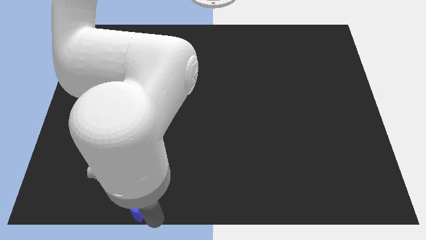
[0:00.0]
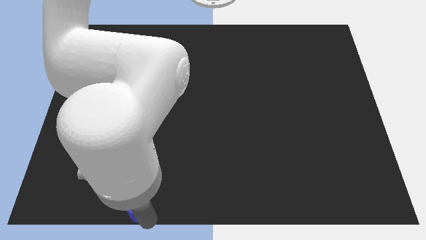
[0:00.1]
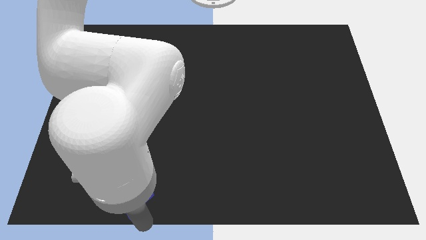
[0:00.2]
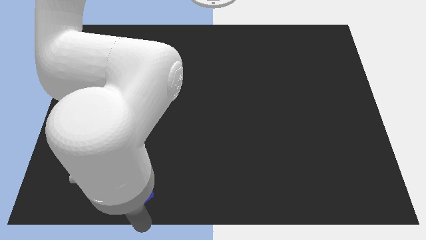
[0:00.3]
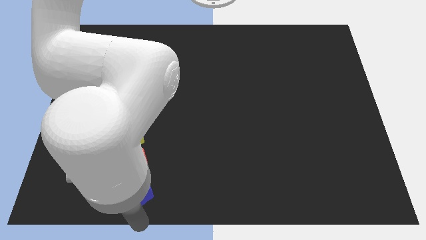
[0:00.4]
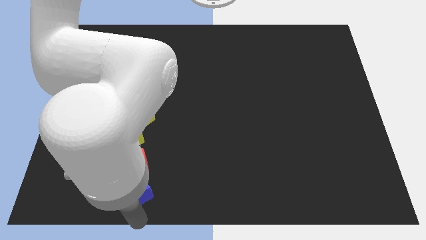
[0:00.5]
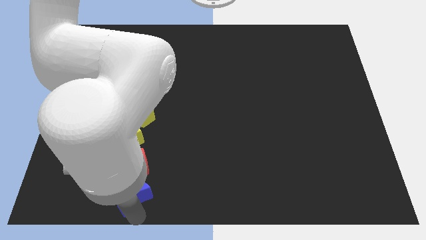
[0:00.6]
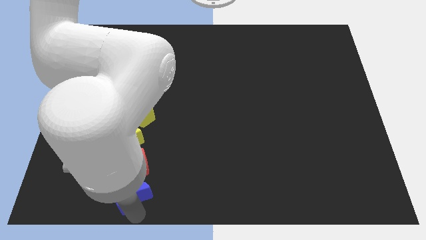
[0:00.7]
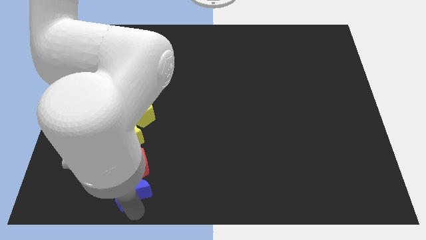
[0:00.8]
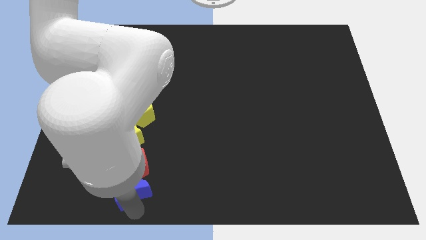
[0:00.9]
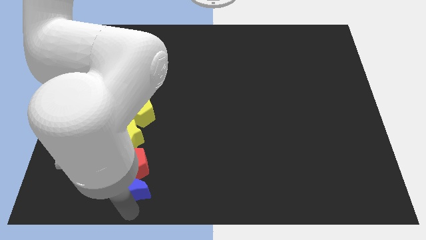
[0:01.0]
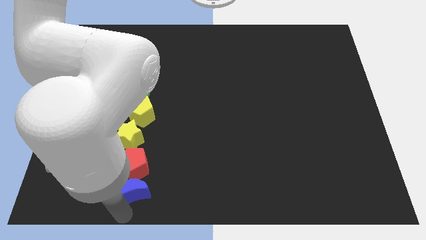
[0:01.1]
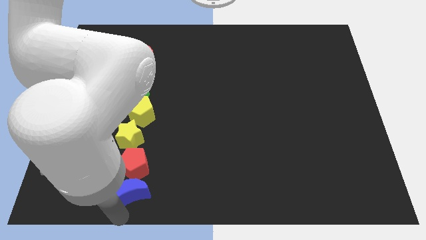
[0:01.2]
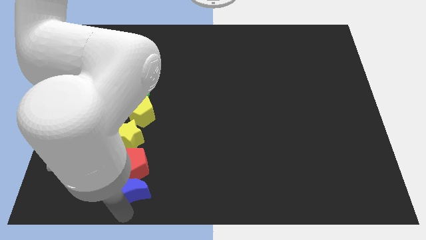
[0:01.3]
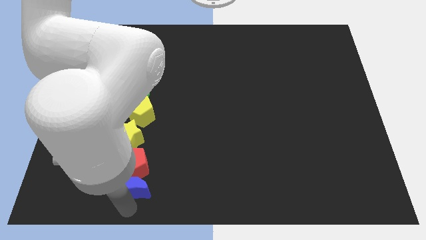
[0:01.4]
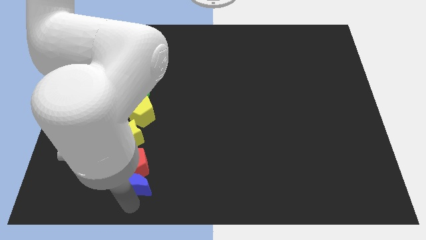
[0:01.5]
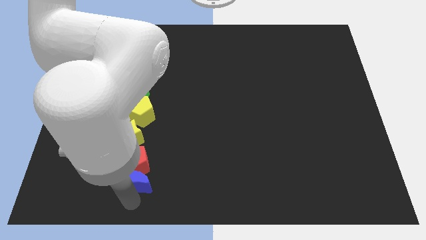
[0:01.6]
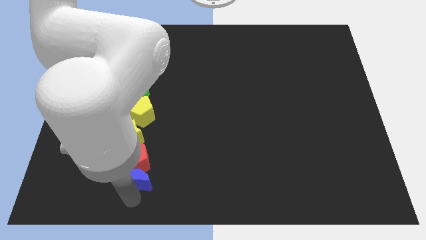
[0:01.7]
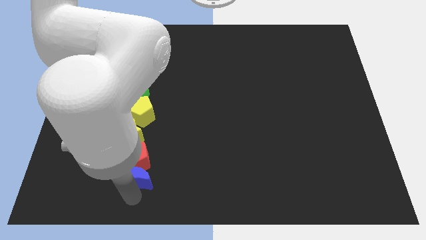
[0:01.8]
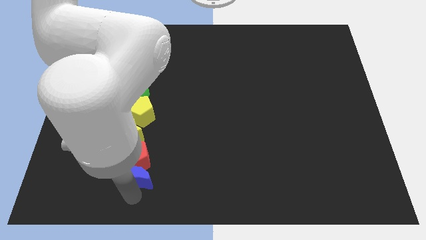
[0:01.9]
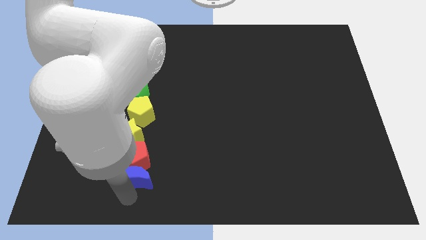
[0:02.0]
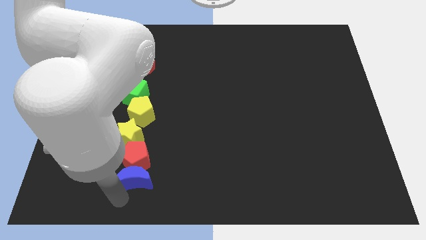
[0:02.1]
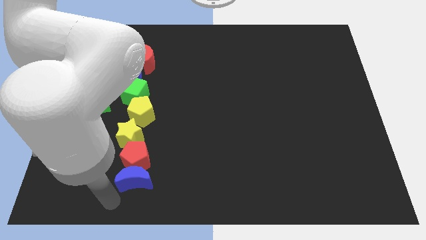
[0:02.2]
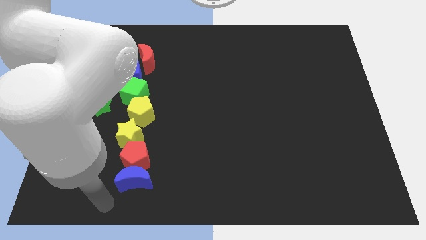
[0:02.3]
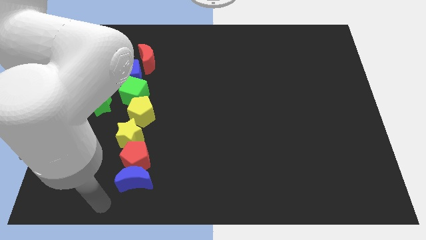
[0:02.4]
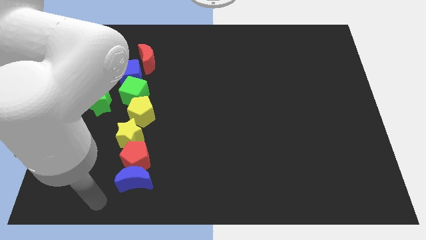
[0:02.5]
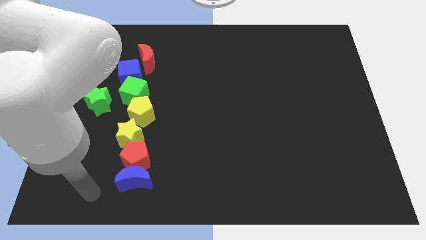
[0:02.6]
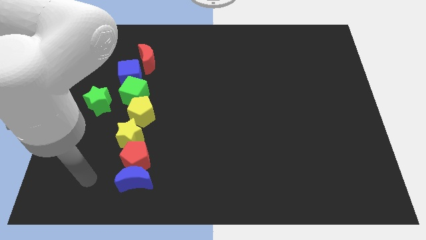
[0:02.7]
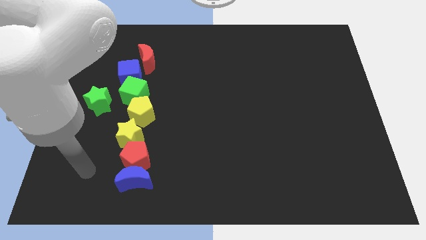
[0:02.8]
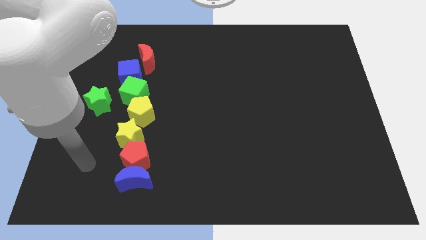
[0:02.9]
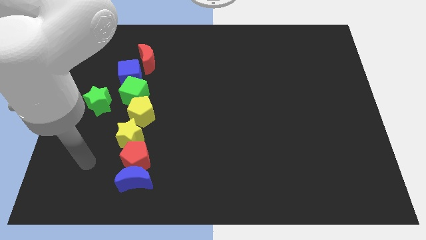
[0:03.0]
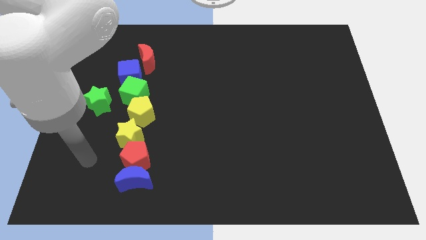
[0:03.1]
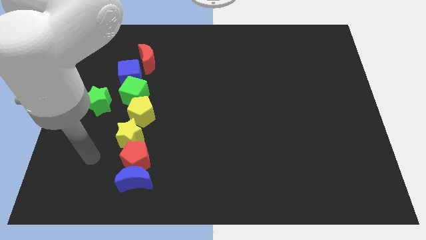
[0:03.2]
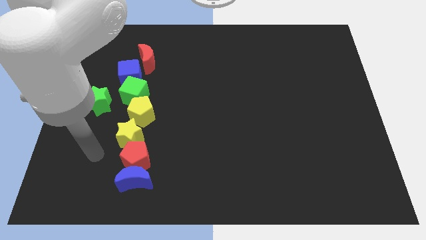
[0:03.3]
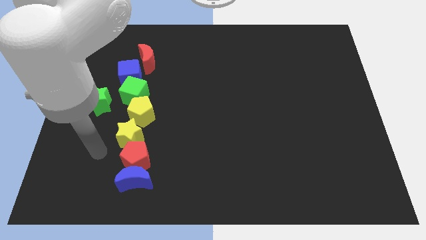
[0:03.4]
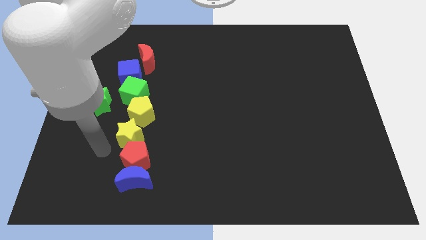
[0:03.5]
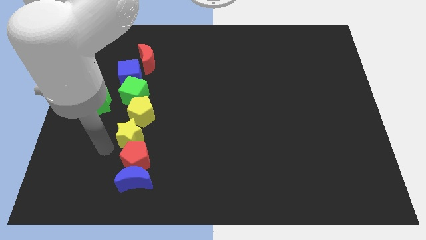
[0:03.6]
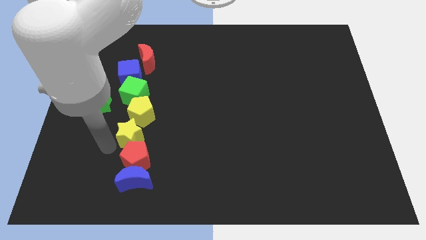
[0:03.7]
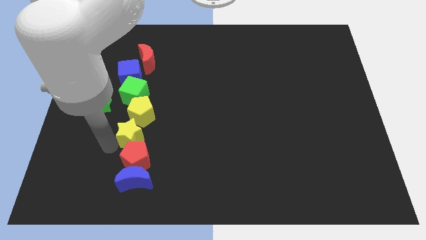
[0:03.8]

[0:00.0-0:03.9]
push blue crescent into the red pentagon

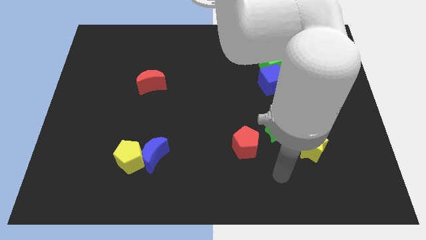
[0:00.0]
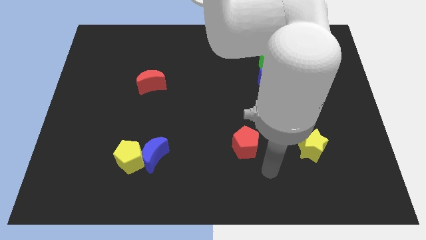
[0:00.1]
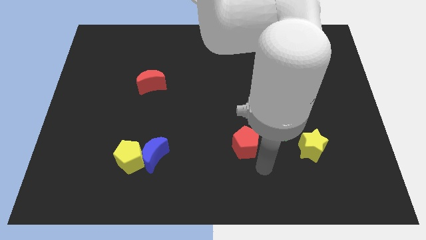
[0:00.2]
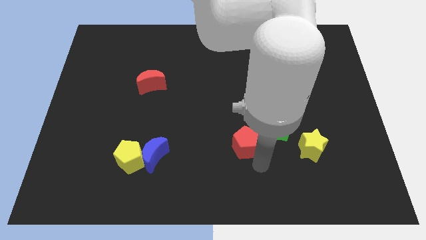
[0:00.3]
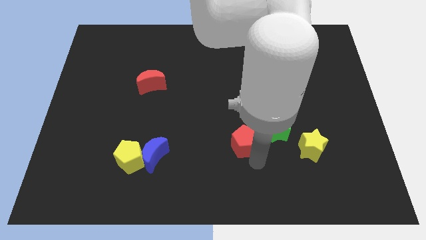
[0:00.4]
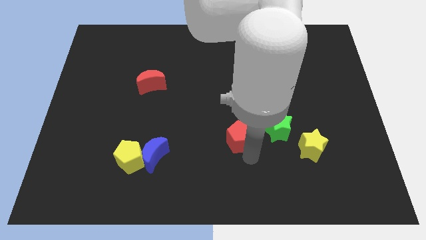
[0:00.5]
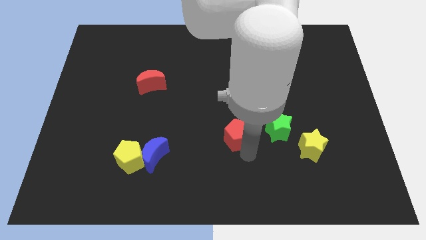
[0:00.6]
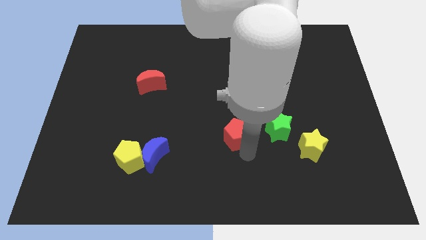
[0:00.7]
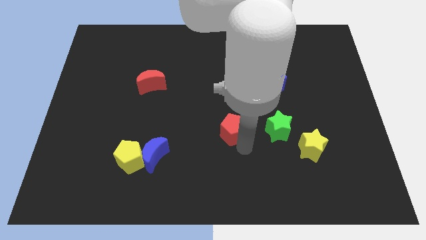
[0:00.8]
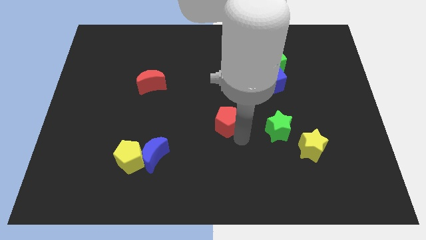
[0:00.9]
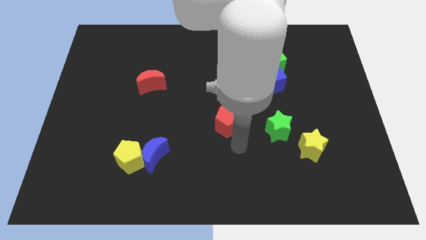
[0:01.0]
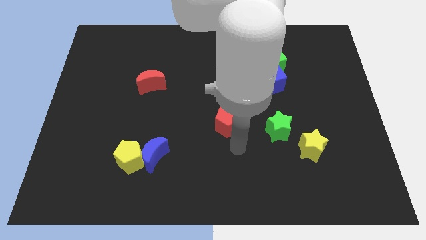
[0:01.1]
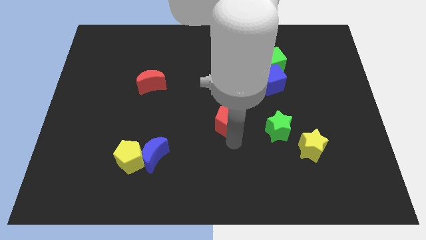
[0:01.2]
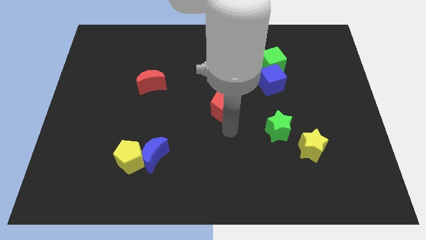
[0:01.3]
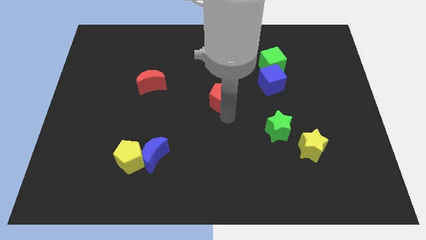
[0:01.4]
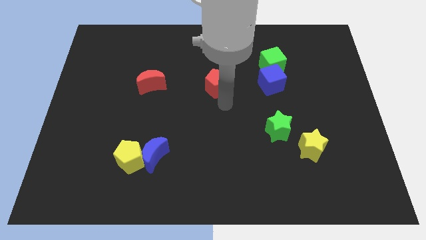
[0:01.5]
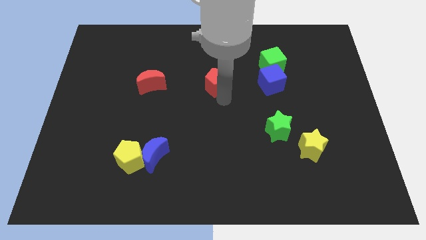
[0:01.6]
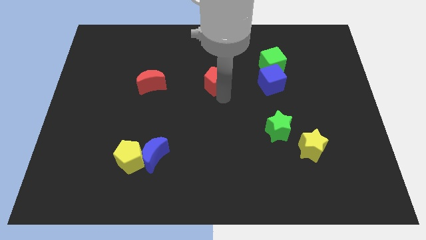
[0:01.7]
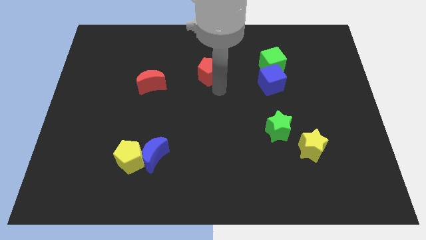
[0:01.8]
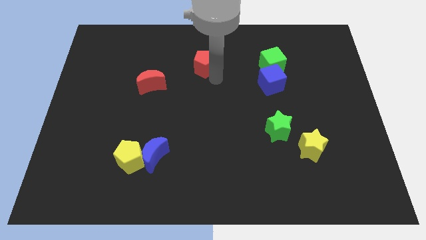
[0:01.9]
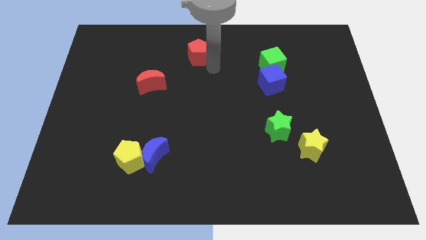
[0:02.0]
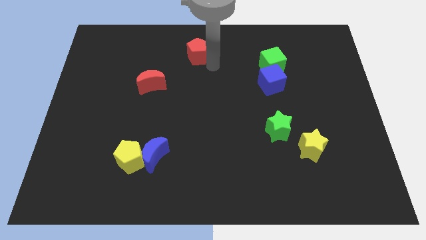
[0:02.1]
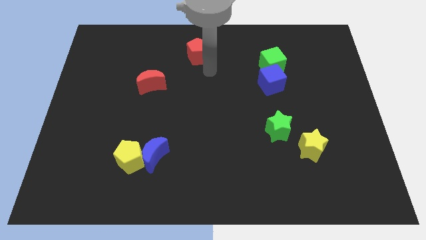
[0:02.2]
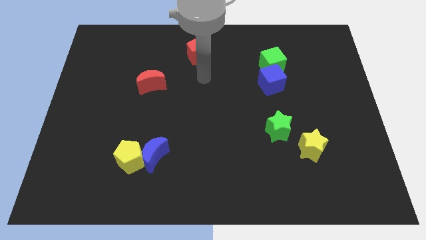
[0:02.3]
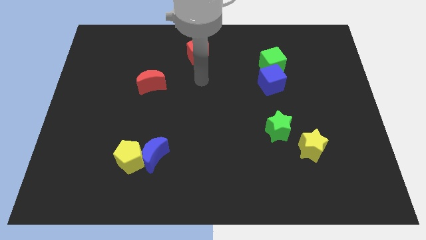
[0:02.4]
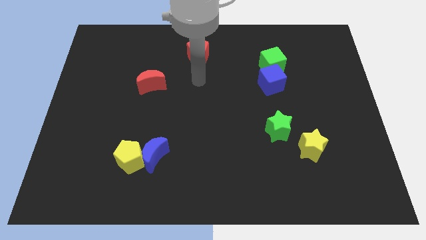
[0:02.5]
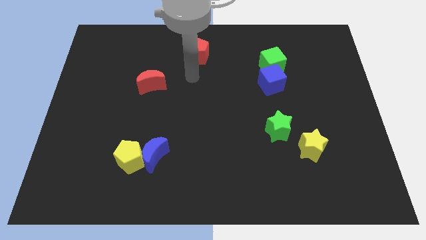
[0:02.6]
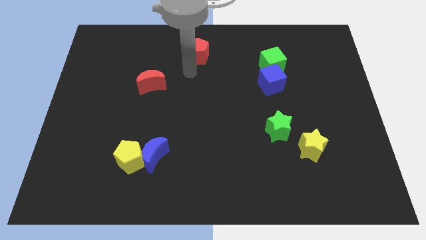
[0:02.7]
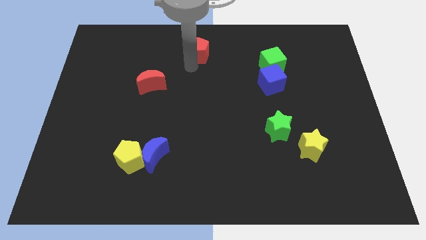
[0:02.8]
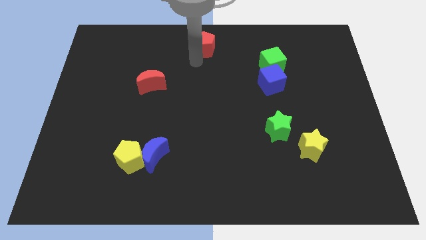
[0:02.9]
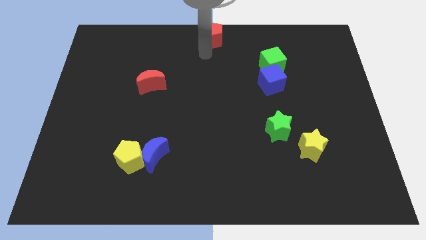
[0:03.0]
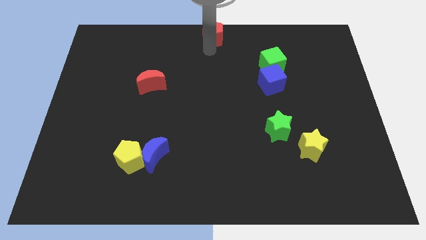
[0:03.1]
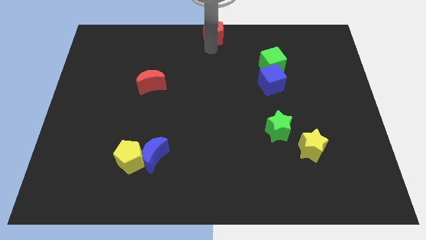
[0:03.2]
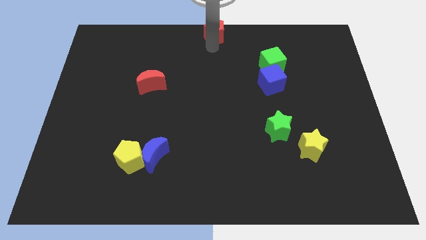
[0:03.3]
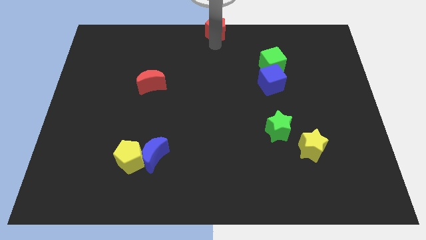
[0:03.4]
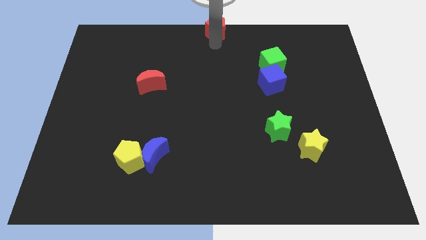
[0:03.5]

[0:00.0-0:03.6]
push the red pentagon towards the top centre of the board

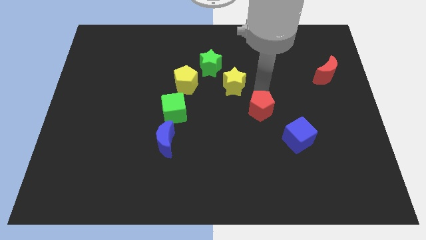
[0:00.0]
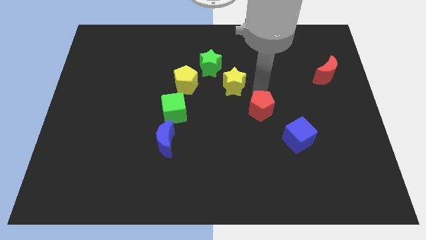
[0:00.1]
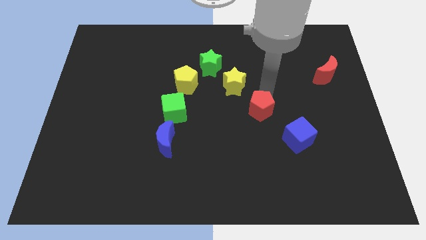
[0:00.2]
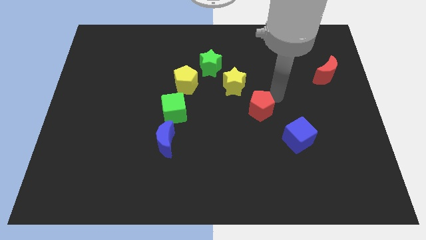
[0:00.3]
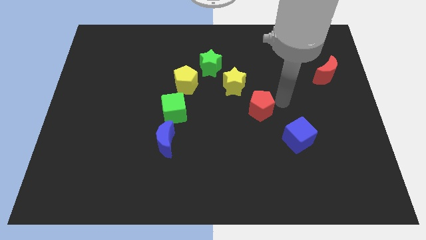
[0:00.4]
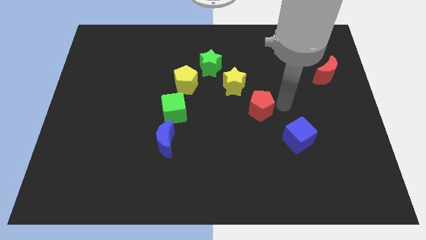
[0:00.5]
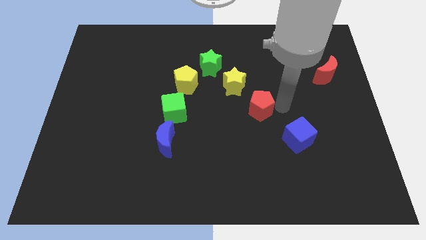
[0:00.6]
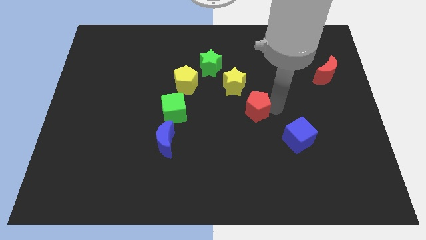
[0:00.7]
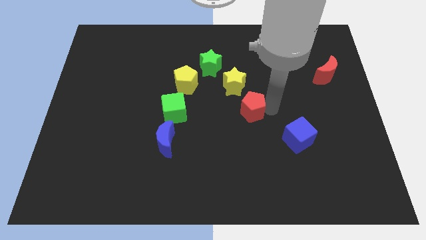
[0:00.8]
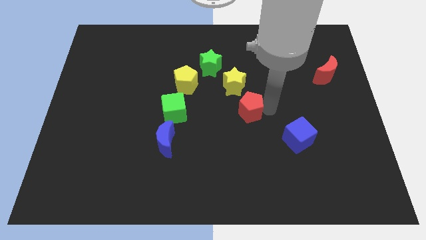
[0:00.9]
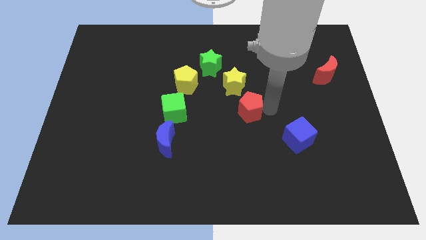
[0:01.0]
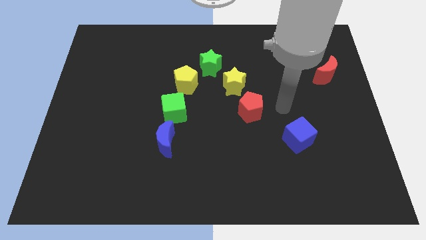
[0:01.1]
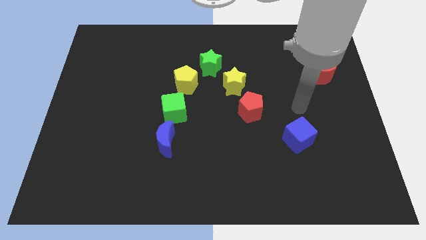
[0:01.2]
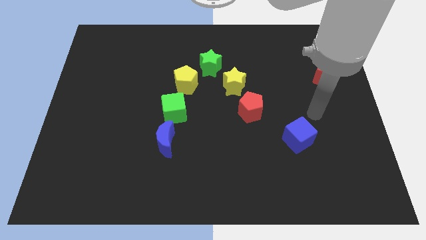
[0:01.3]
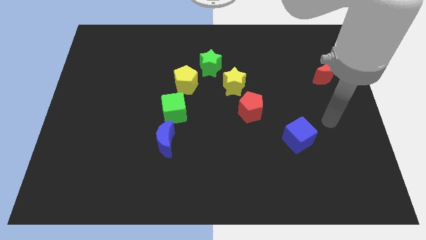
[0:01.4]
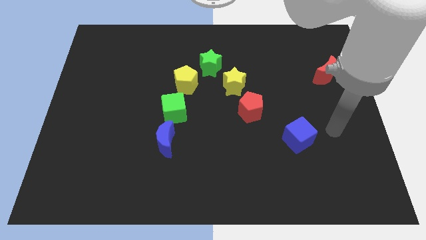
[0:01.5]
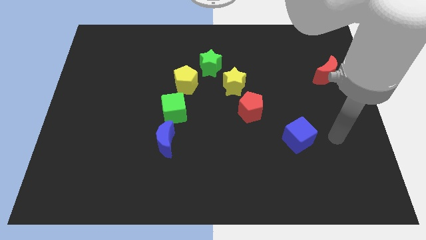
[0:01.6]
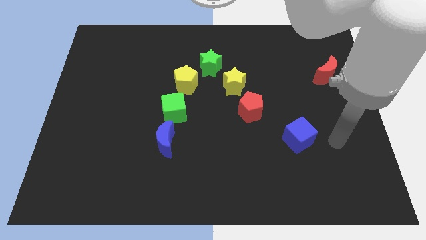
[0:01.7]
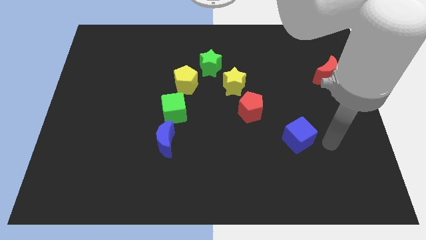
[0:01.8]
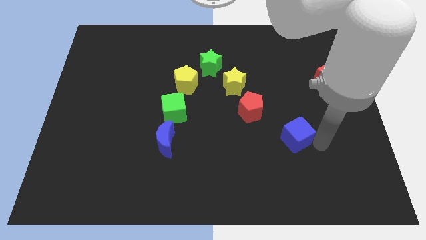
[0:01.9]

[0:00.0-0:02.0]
slightly move the red pentagon towards the green cube
